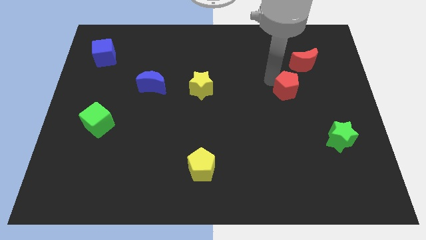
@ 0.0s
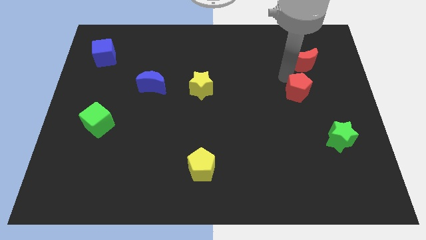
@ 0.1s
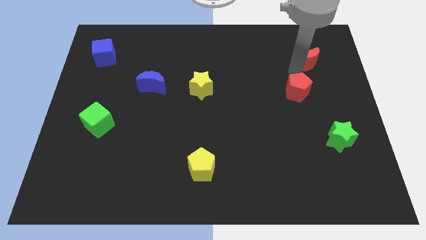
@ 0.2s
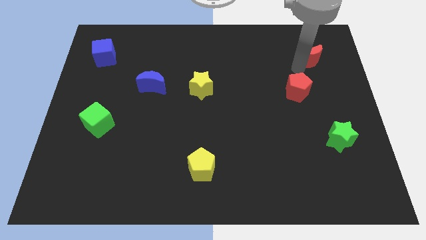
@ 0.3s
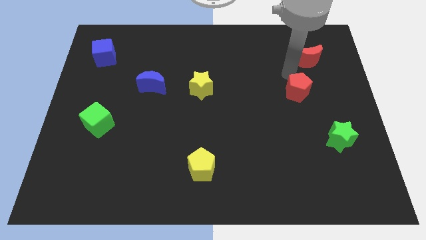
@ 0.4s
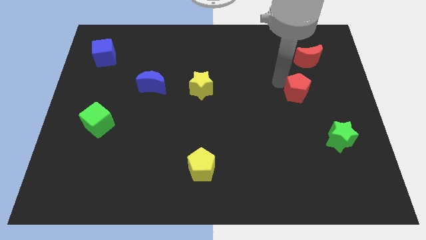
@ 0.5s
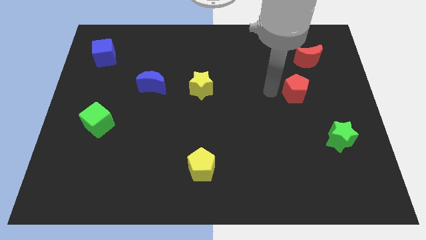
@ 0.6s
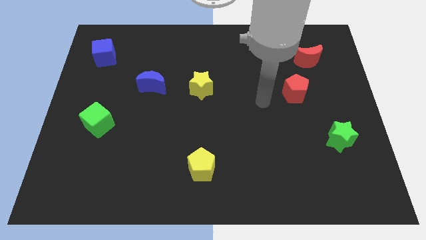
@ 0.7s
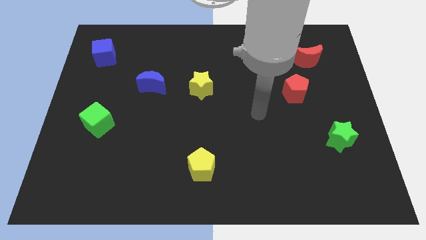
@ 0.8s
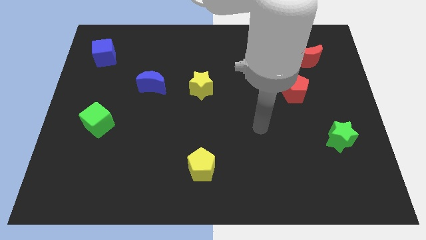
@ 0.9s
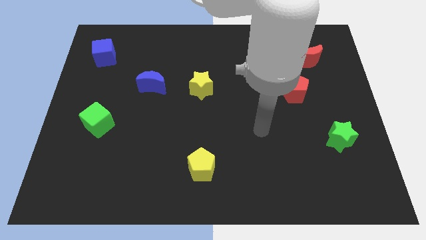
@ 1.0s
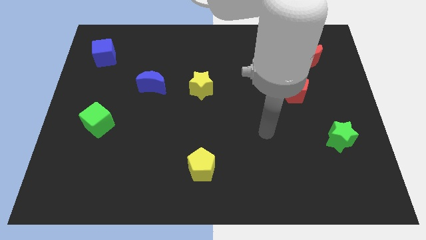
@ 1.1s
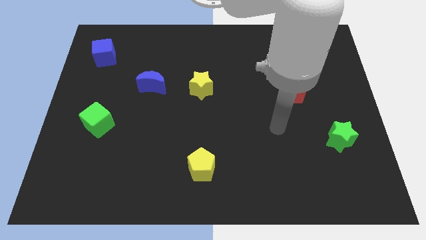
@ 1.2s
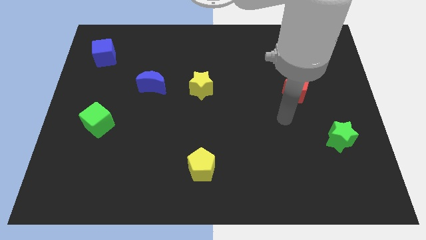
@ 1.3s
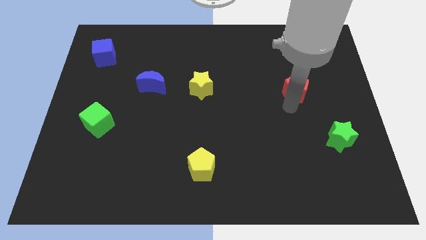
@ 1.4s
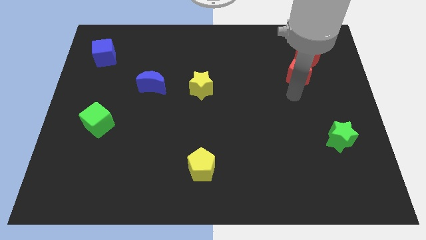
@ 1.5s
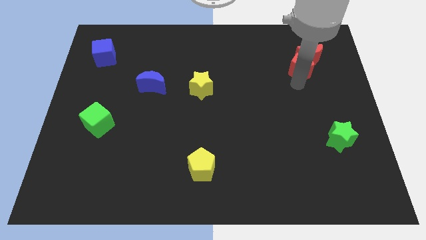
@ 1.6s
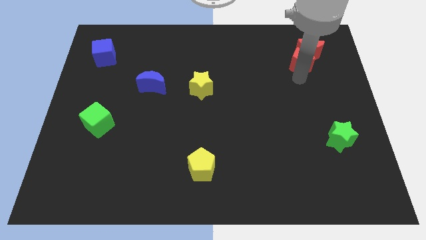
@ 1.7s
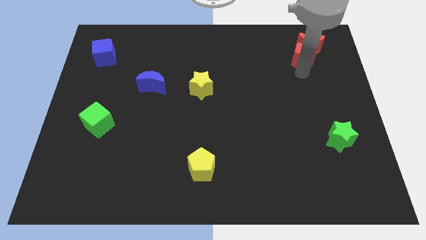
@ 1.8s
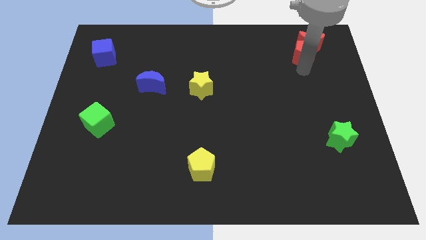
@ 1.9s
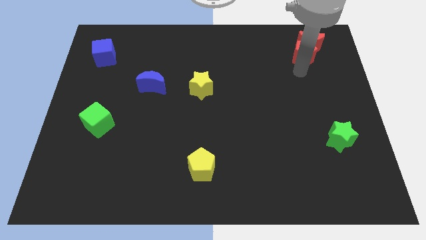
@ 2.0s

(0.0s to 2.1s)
push red pentagon into red moon

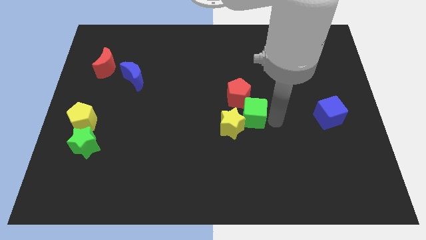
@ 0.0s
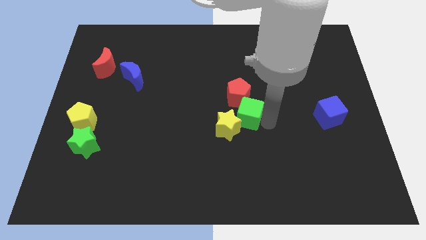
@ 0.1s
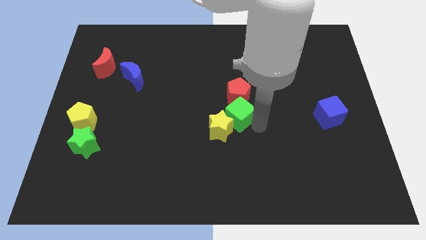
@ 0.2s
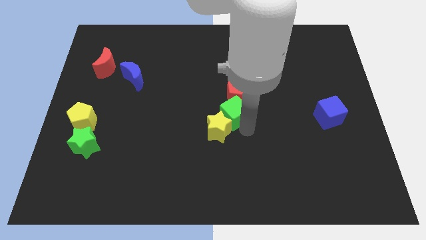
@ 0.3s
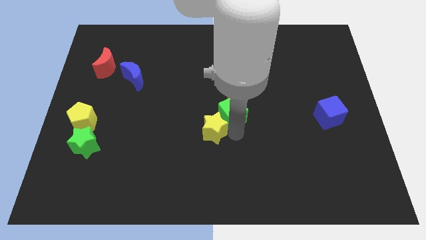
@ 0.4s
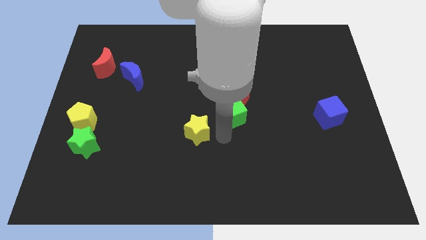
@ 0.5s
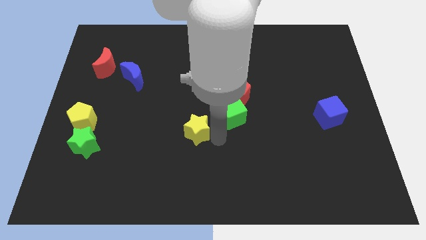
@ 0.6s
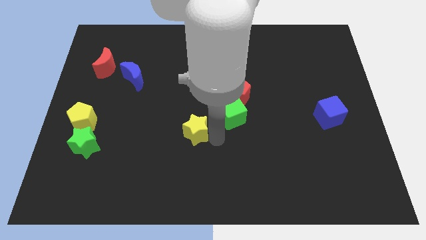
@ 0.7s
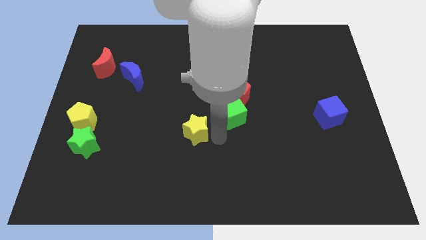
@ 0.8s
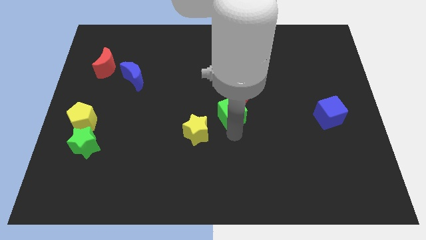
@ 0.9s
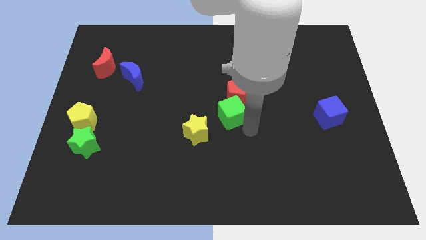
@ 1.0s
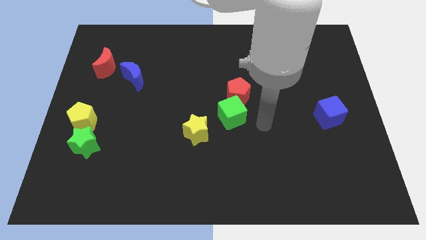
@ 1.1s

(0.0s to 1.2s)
separate the green cube and yellow star by moving the green cube to the bottom side of the red pentagon

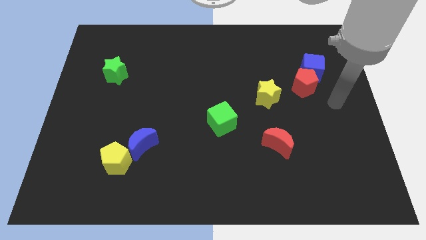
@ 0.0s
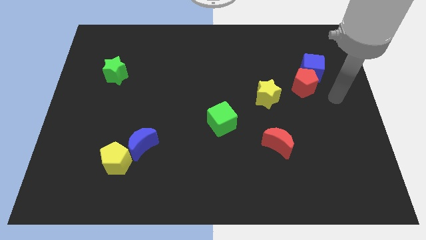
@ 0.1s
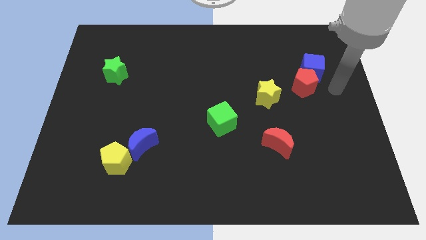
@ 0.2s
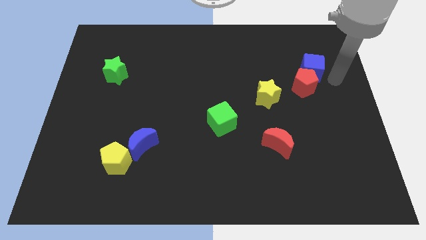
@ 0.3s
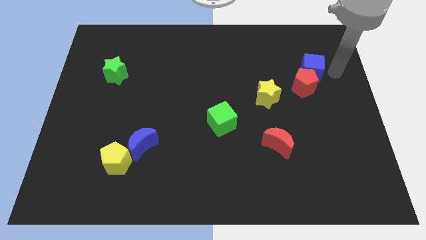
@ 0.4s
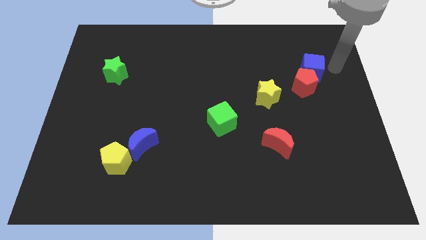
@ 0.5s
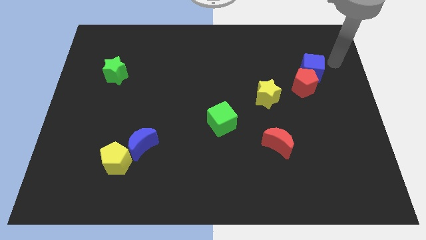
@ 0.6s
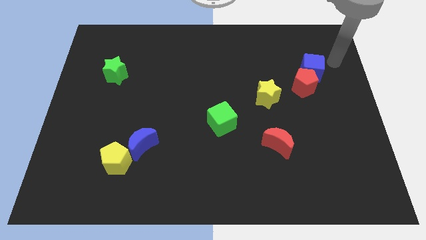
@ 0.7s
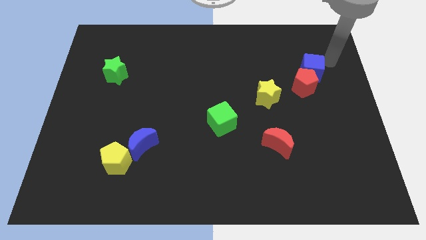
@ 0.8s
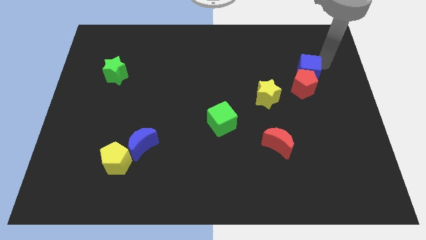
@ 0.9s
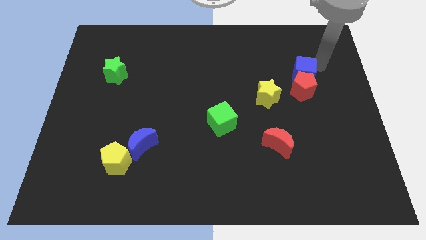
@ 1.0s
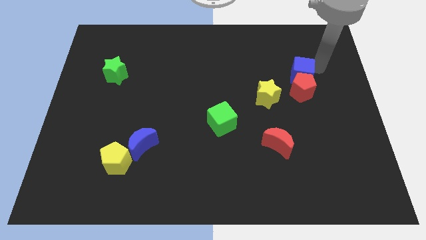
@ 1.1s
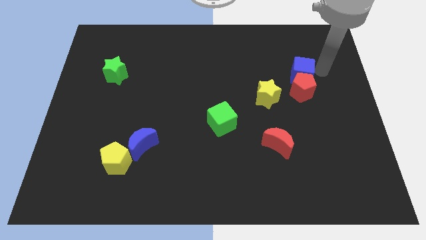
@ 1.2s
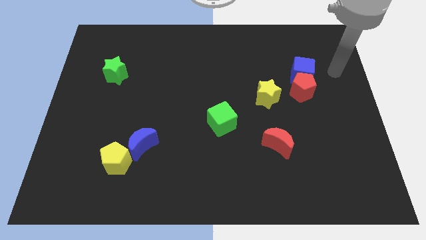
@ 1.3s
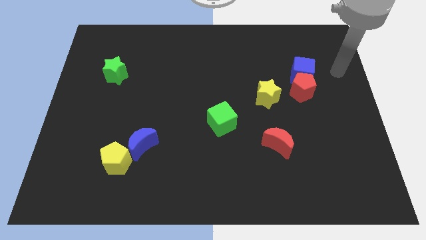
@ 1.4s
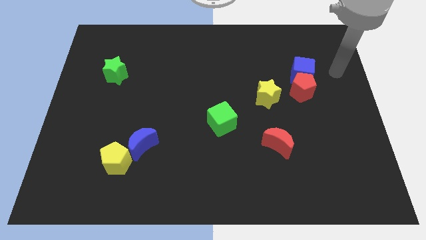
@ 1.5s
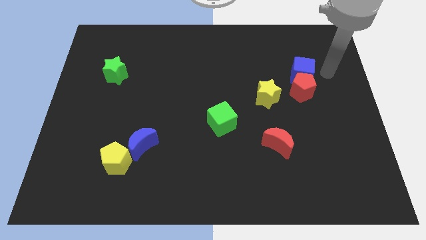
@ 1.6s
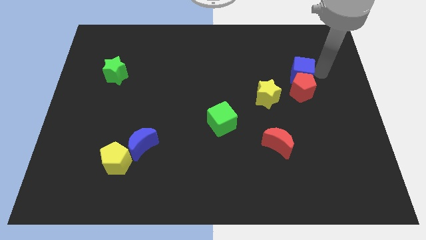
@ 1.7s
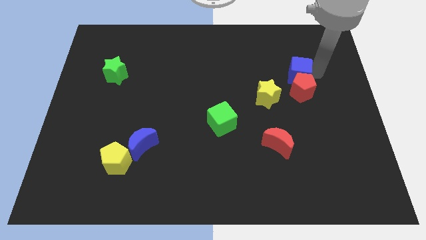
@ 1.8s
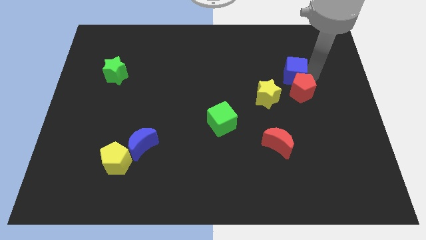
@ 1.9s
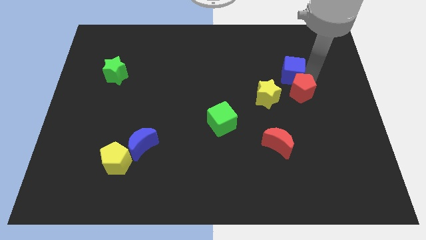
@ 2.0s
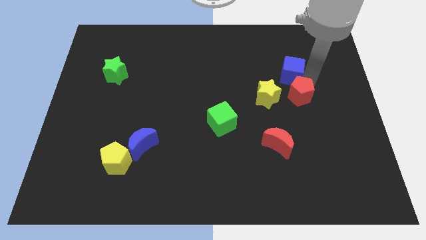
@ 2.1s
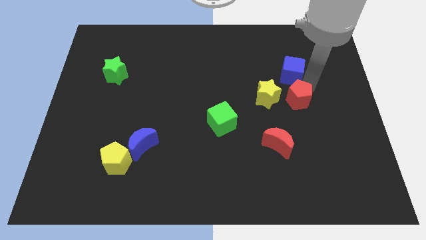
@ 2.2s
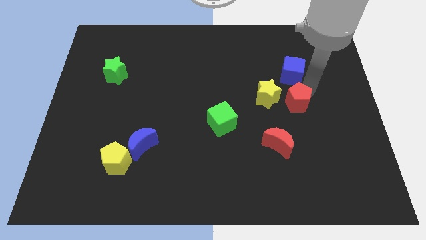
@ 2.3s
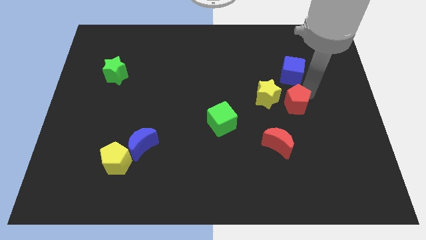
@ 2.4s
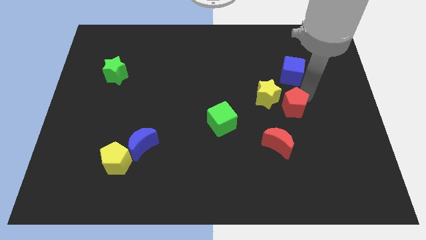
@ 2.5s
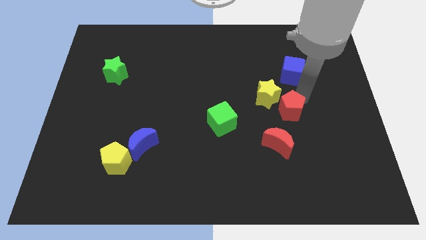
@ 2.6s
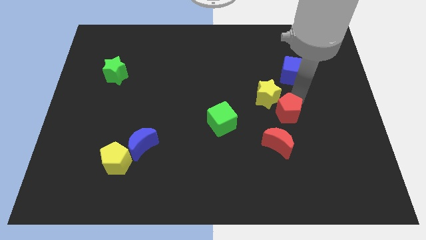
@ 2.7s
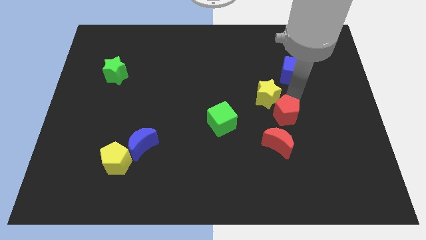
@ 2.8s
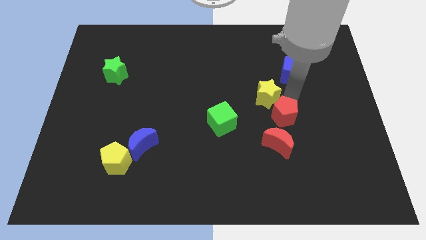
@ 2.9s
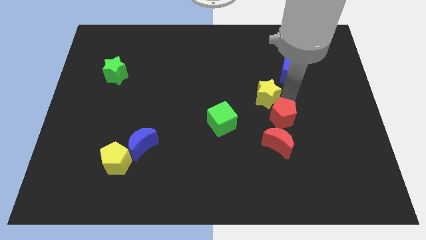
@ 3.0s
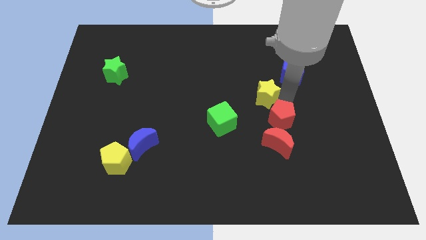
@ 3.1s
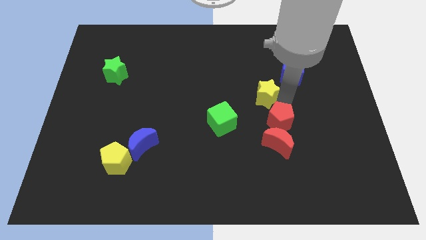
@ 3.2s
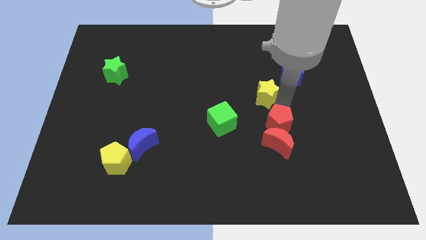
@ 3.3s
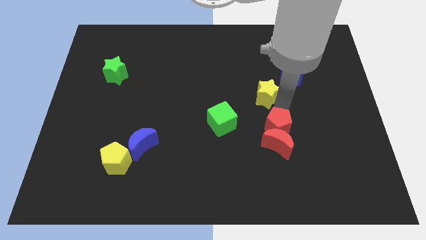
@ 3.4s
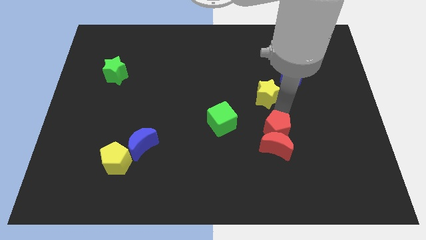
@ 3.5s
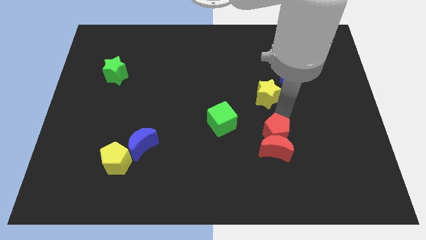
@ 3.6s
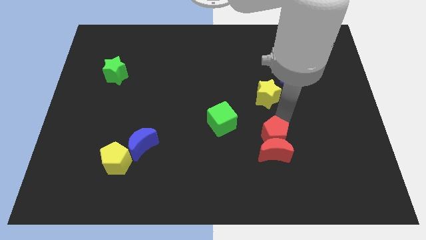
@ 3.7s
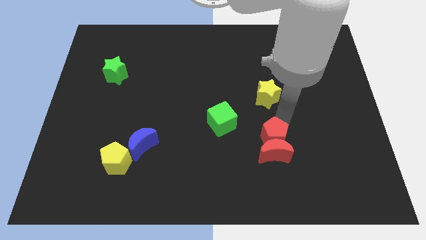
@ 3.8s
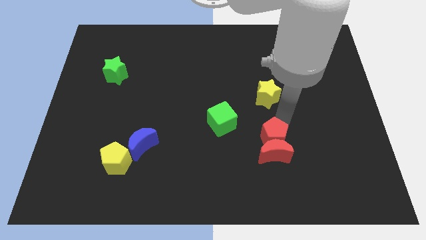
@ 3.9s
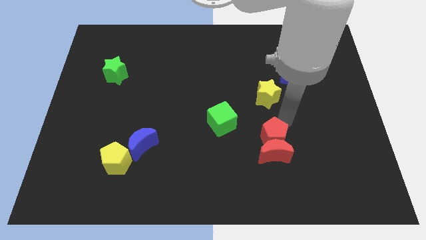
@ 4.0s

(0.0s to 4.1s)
push the red pentagon towards the red crescent

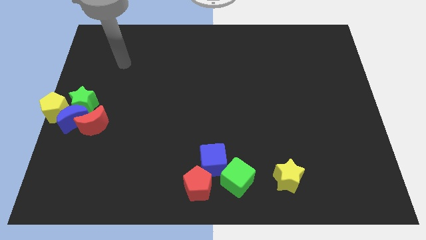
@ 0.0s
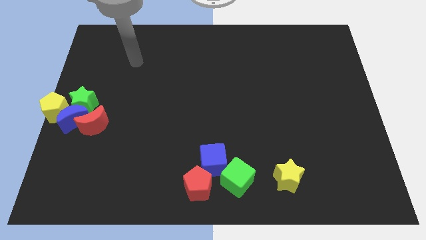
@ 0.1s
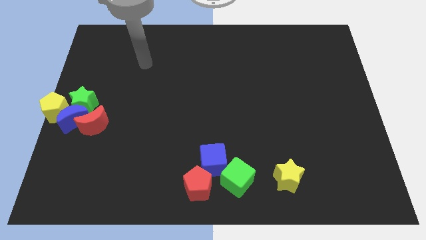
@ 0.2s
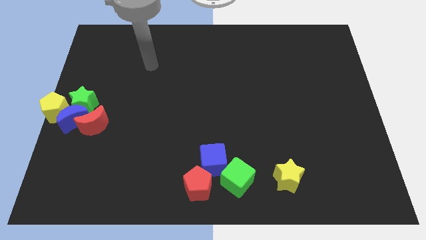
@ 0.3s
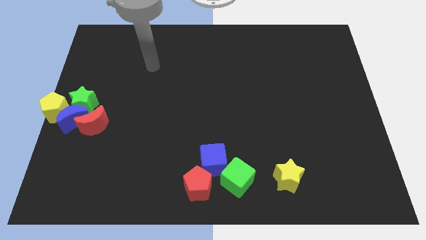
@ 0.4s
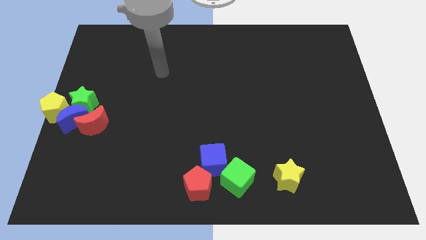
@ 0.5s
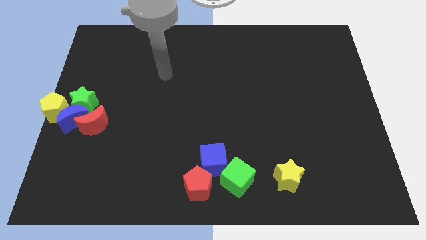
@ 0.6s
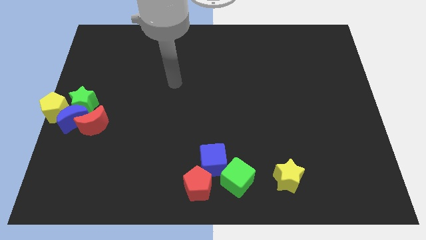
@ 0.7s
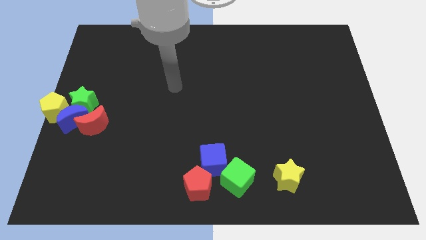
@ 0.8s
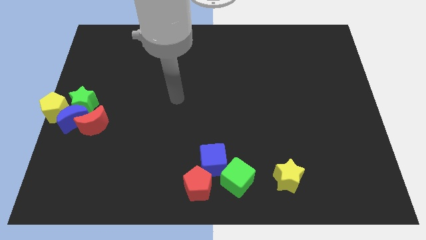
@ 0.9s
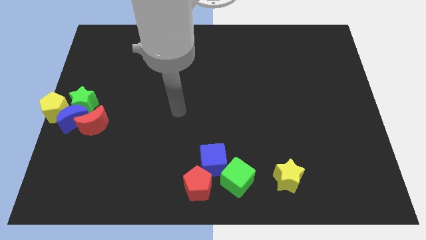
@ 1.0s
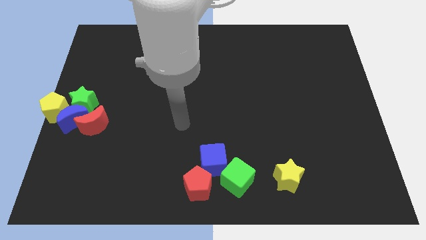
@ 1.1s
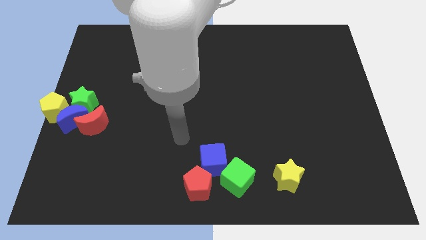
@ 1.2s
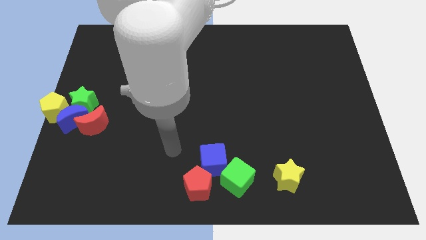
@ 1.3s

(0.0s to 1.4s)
move the arm towards the red pentagon

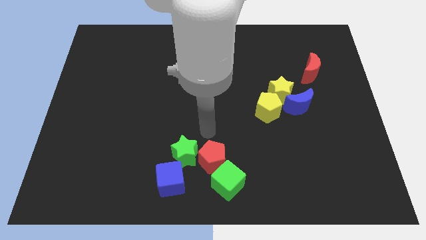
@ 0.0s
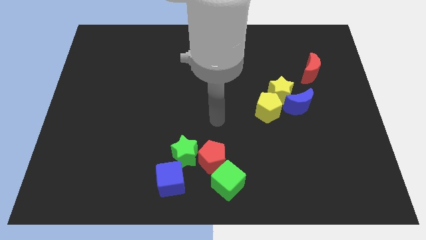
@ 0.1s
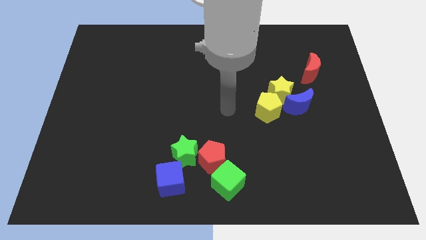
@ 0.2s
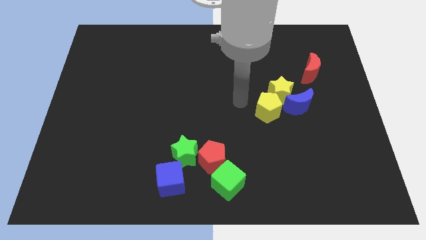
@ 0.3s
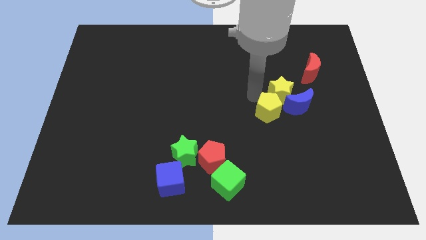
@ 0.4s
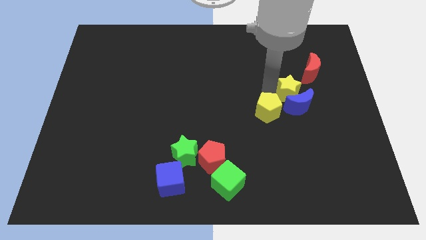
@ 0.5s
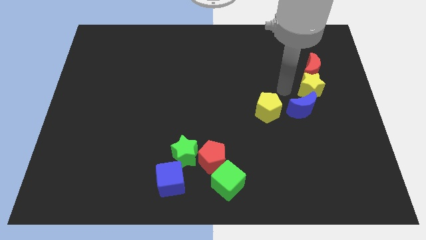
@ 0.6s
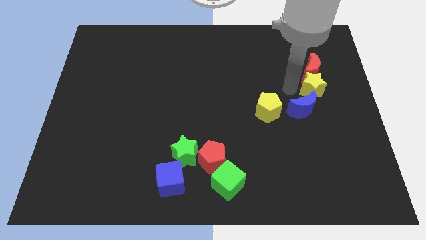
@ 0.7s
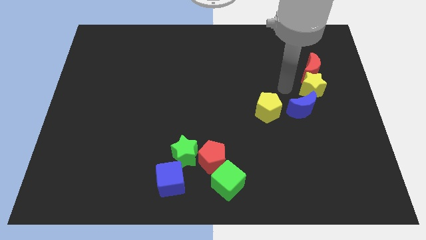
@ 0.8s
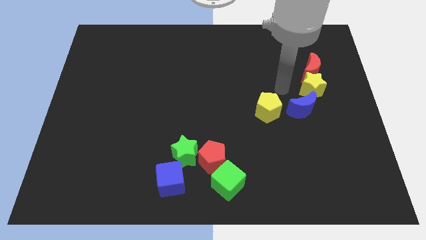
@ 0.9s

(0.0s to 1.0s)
push the yellow star between the red moon and blue moon
